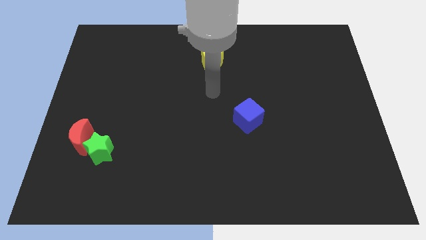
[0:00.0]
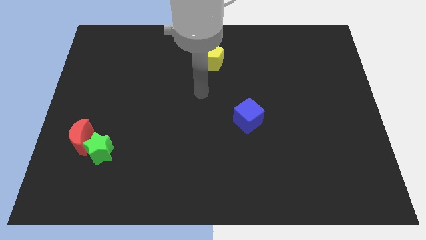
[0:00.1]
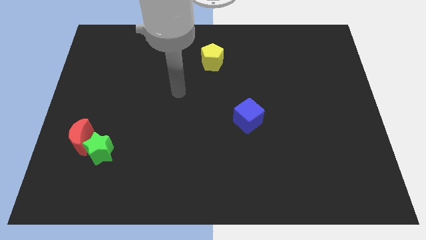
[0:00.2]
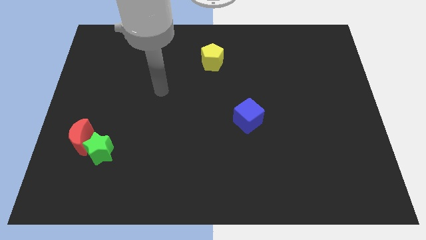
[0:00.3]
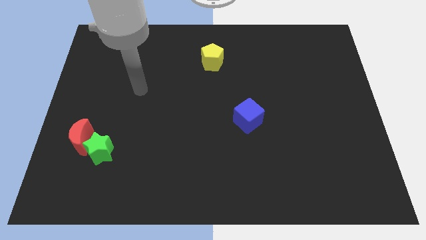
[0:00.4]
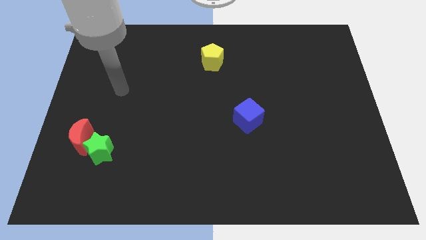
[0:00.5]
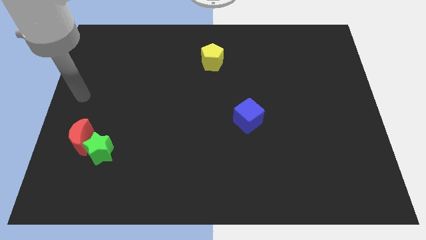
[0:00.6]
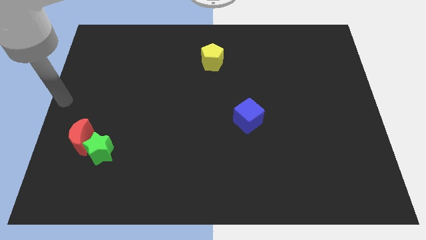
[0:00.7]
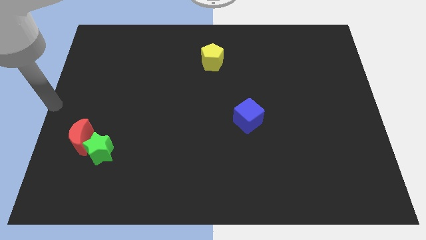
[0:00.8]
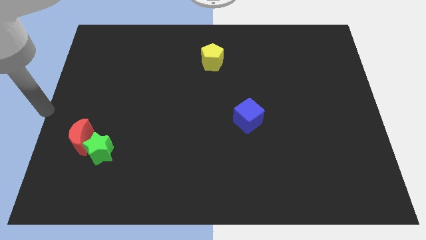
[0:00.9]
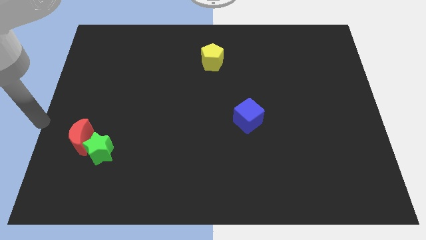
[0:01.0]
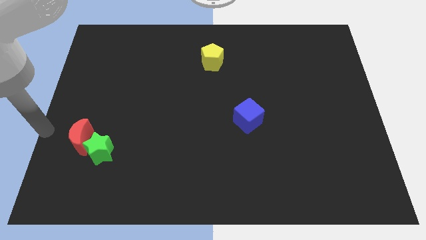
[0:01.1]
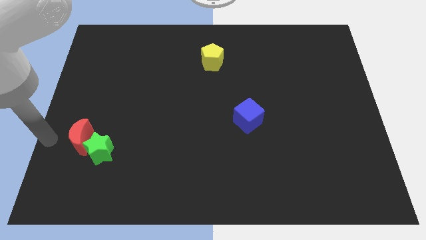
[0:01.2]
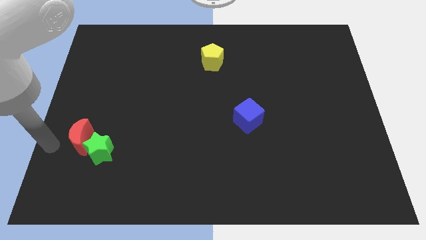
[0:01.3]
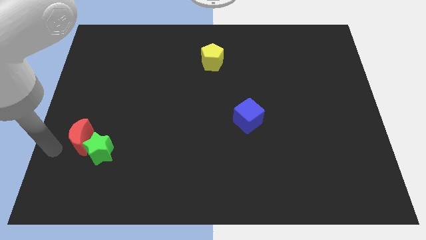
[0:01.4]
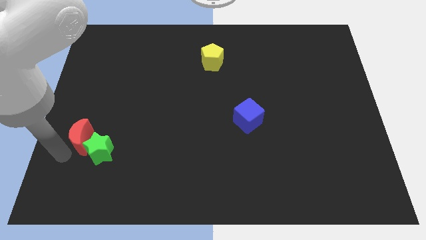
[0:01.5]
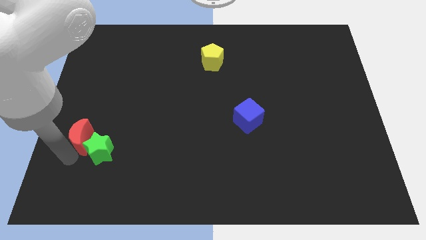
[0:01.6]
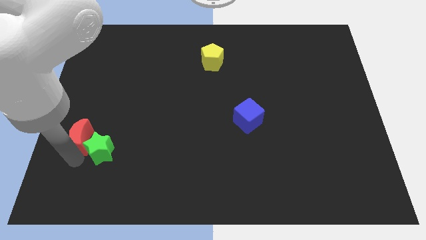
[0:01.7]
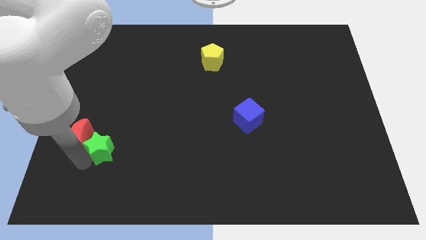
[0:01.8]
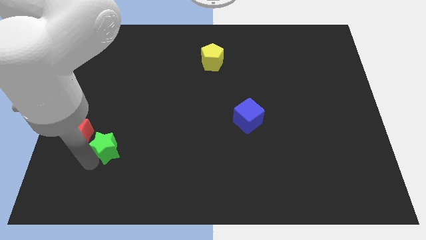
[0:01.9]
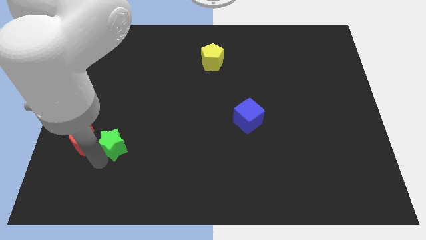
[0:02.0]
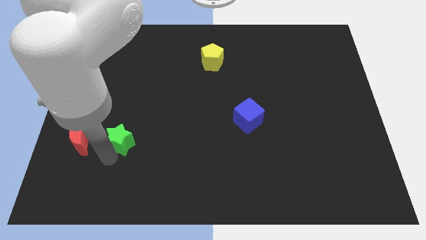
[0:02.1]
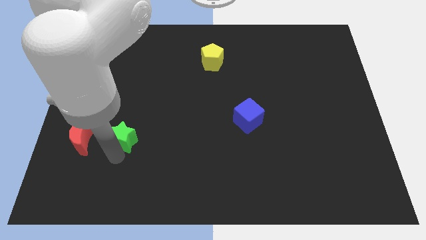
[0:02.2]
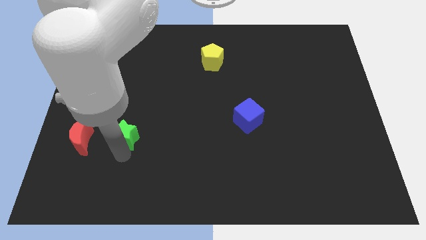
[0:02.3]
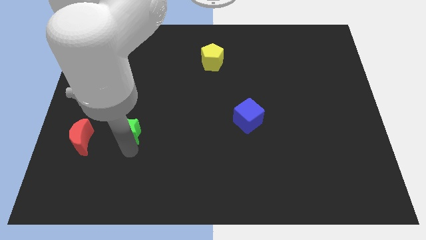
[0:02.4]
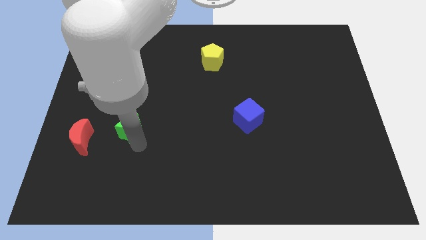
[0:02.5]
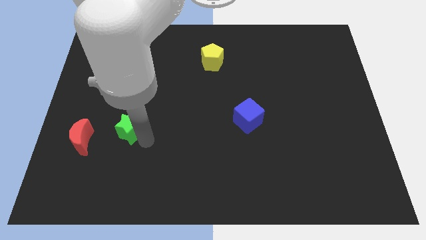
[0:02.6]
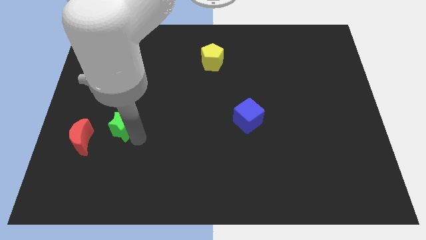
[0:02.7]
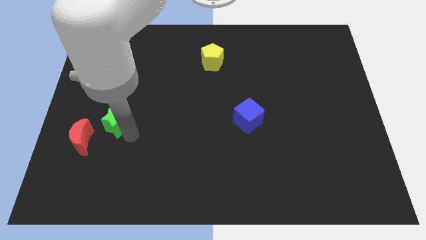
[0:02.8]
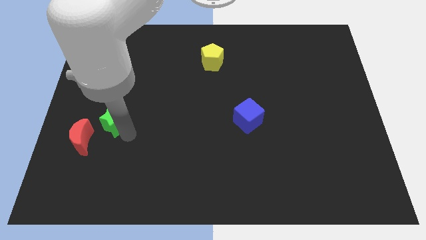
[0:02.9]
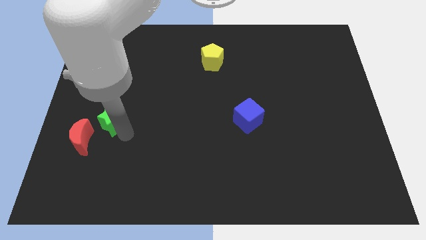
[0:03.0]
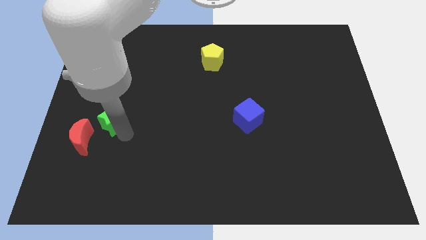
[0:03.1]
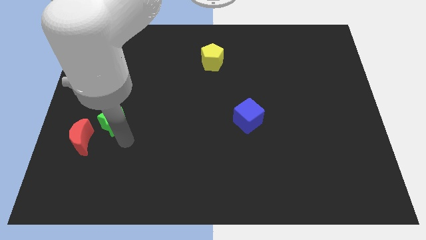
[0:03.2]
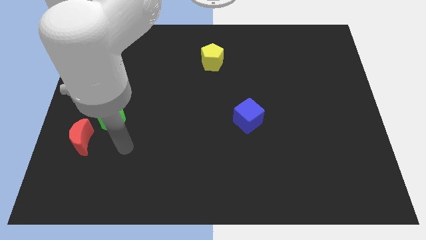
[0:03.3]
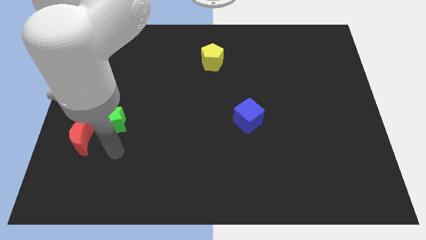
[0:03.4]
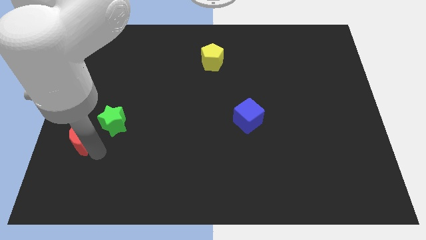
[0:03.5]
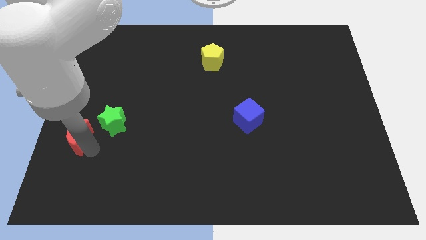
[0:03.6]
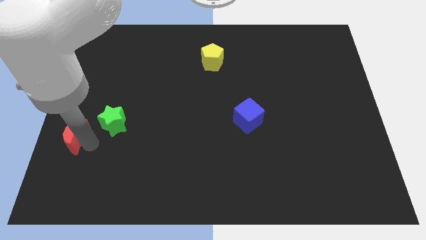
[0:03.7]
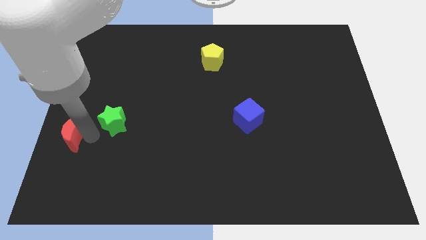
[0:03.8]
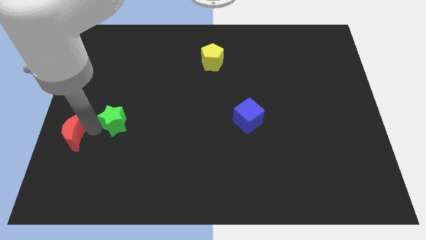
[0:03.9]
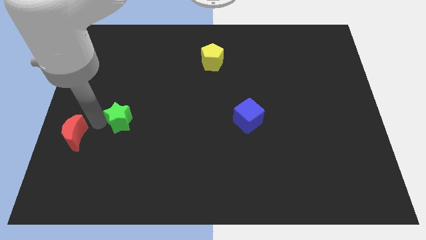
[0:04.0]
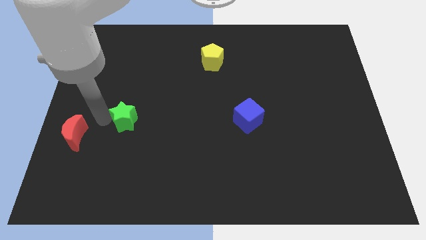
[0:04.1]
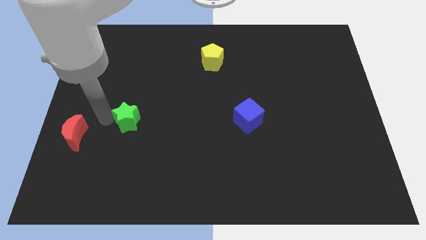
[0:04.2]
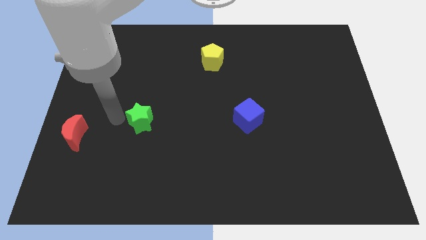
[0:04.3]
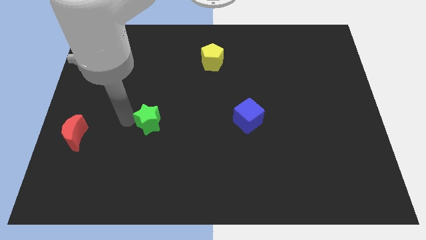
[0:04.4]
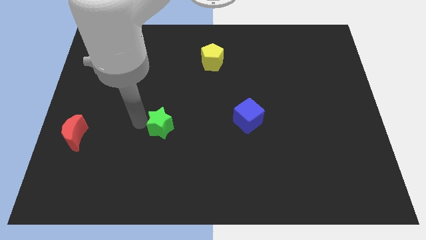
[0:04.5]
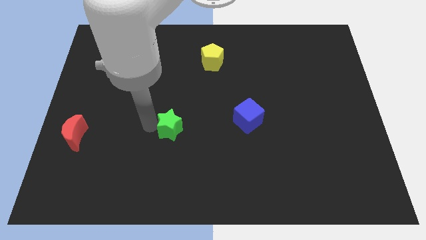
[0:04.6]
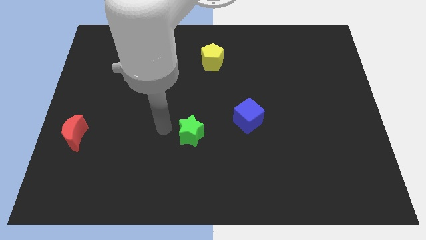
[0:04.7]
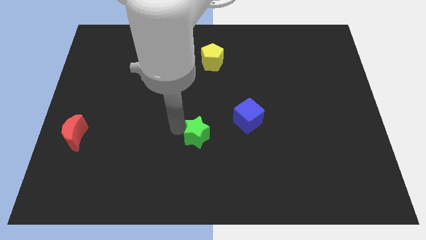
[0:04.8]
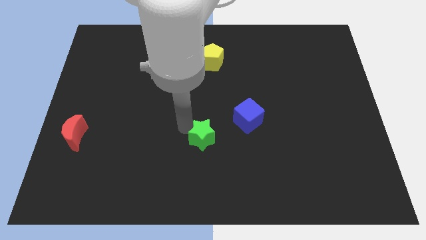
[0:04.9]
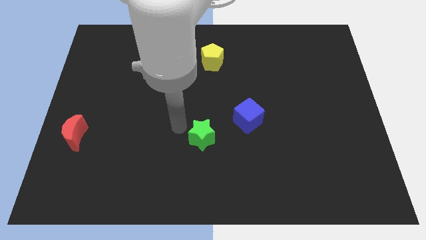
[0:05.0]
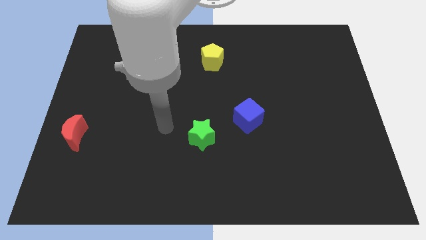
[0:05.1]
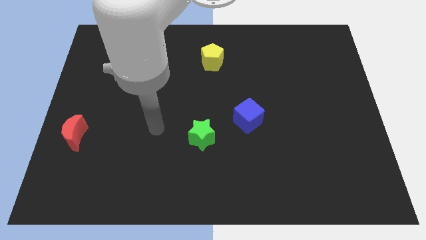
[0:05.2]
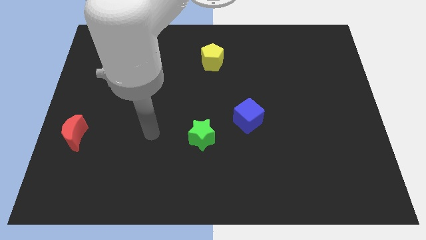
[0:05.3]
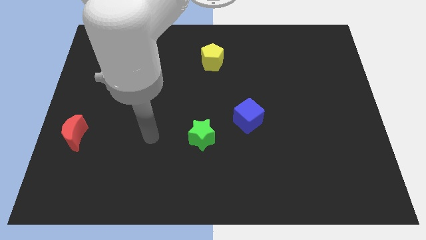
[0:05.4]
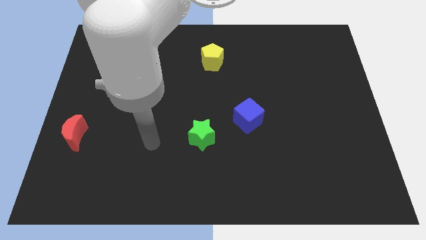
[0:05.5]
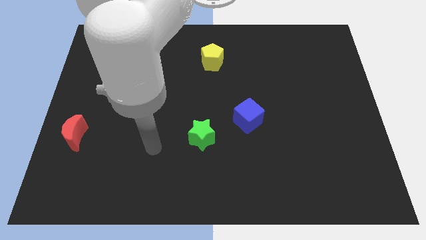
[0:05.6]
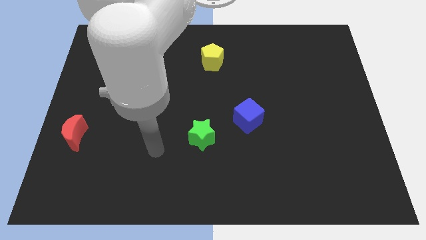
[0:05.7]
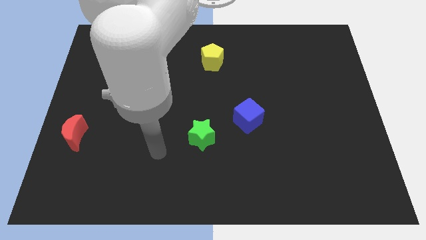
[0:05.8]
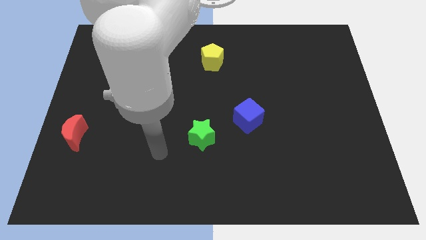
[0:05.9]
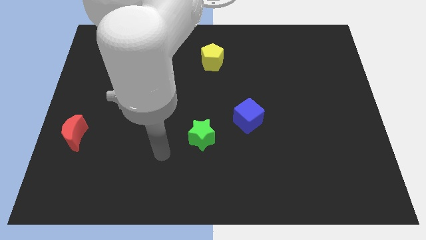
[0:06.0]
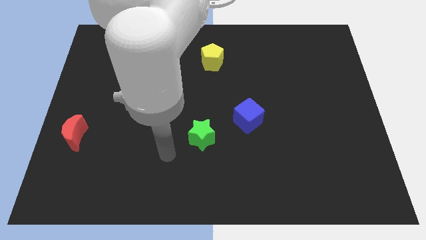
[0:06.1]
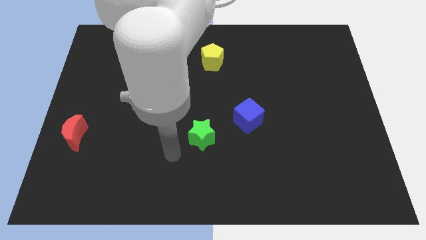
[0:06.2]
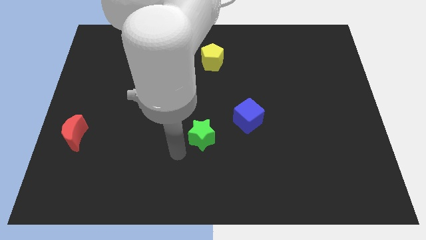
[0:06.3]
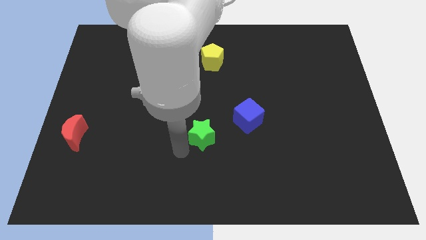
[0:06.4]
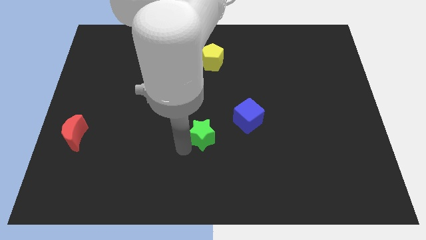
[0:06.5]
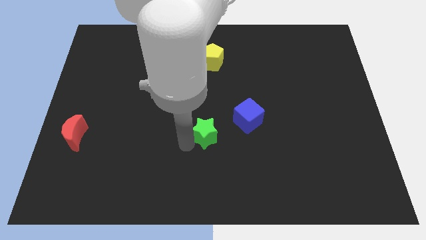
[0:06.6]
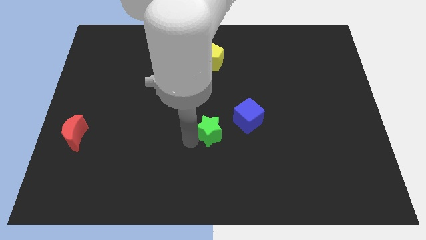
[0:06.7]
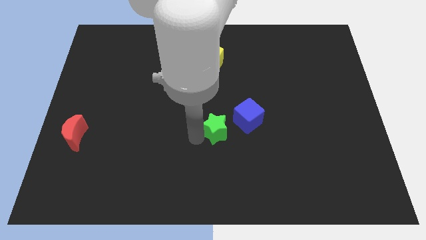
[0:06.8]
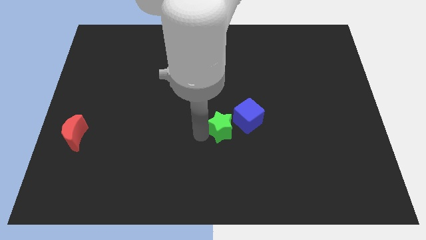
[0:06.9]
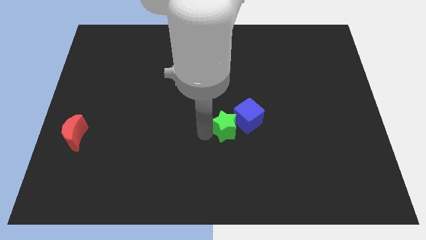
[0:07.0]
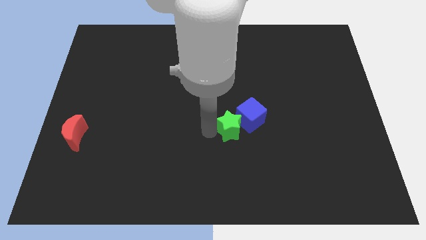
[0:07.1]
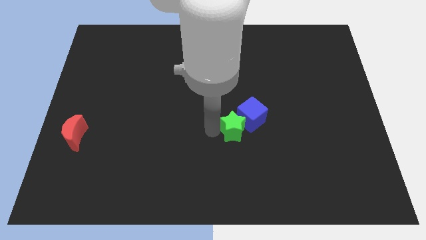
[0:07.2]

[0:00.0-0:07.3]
push the green star towards the blue block

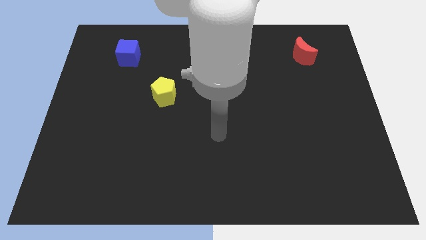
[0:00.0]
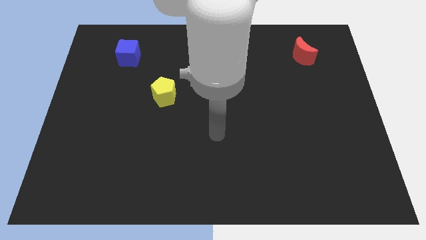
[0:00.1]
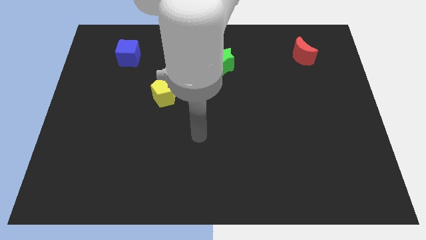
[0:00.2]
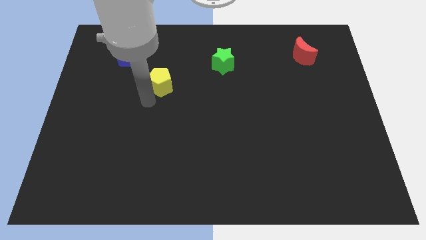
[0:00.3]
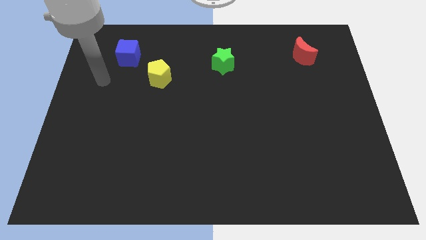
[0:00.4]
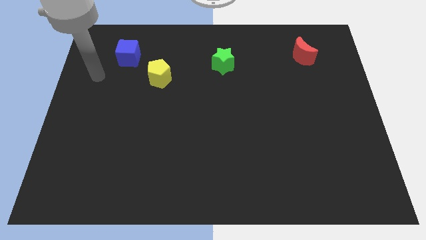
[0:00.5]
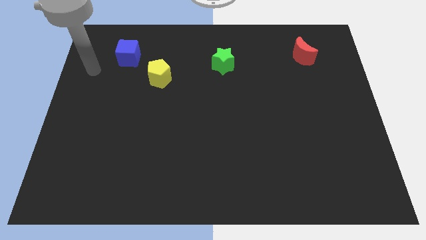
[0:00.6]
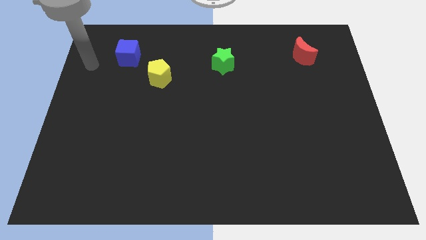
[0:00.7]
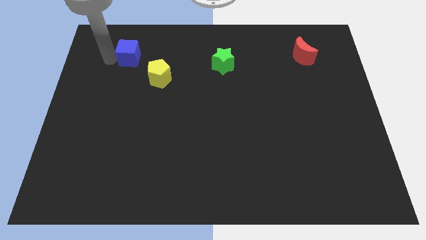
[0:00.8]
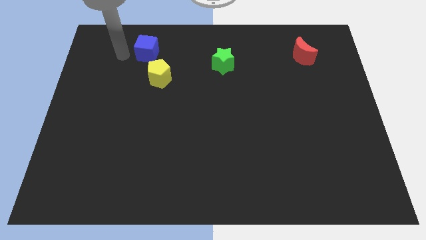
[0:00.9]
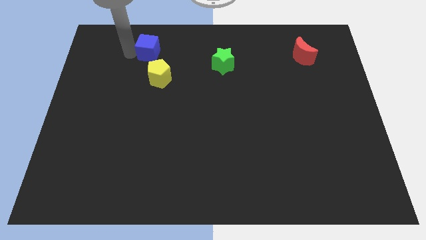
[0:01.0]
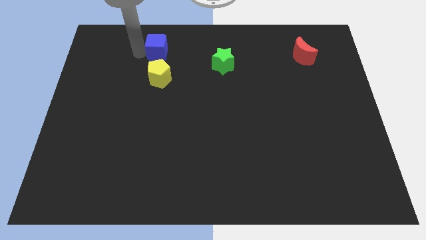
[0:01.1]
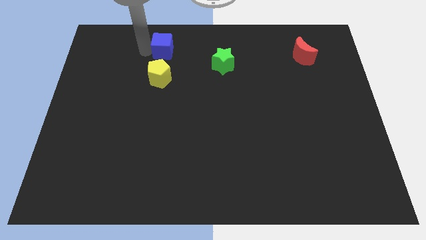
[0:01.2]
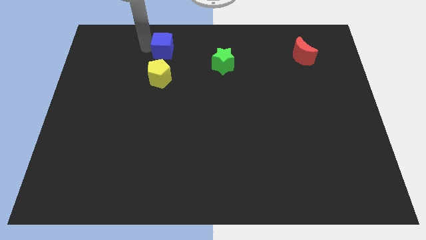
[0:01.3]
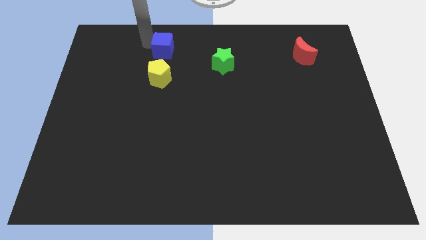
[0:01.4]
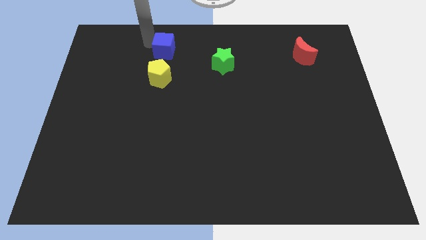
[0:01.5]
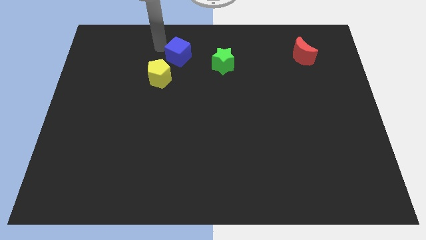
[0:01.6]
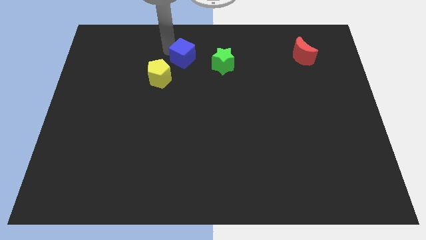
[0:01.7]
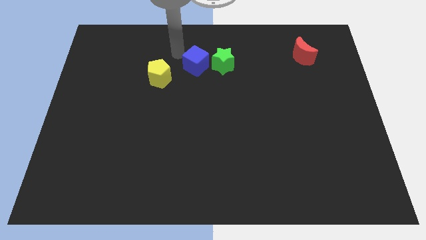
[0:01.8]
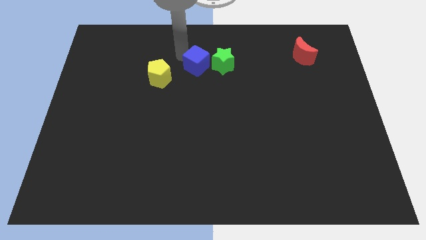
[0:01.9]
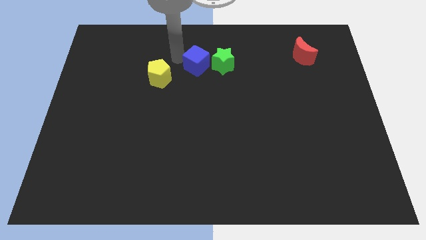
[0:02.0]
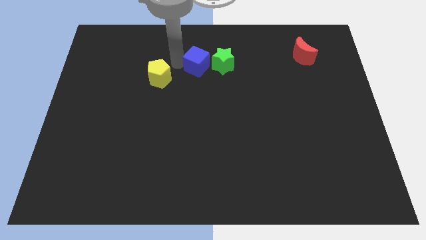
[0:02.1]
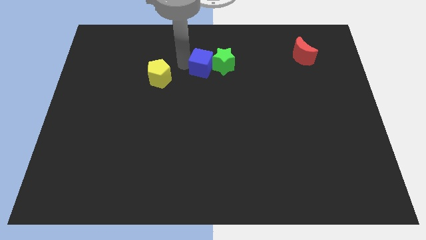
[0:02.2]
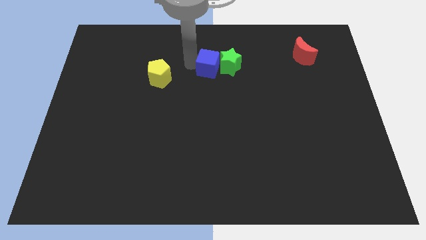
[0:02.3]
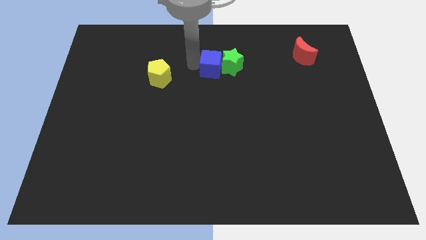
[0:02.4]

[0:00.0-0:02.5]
push the blue cube close to the green star
